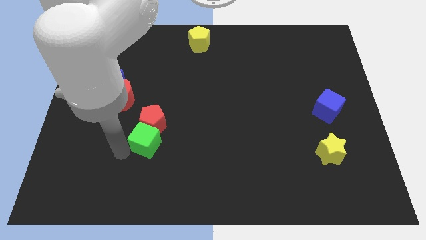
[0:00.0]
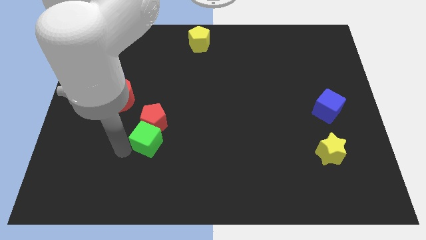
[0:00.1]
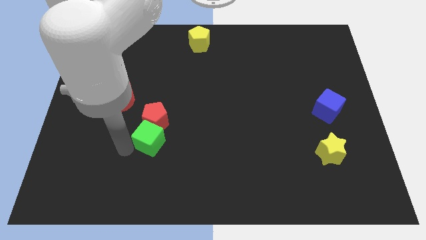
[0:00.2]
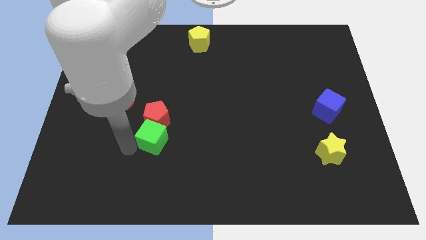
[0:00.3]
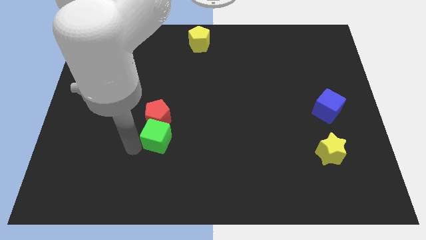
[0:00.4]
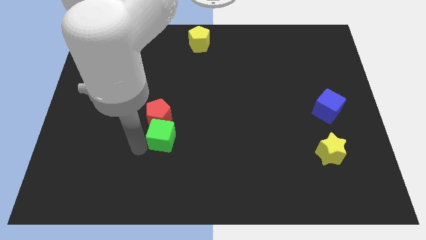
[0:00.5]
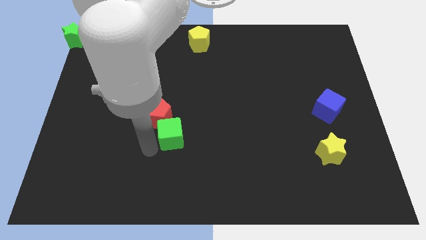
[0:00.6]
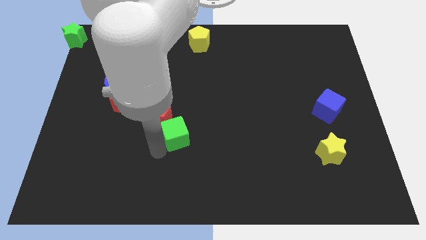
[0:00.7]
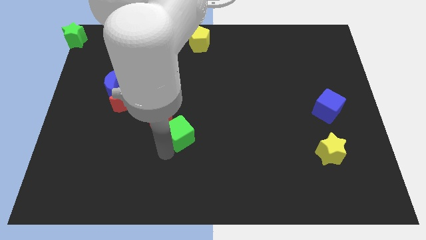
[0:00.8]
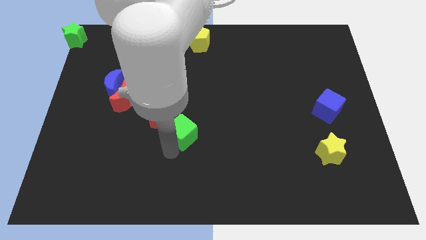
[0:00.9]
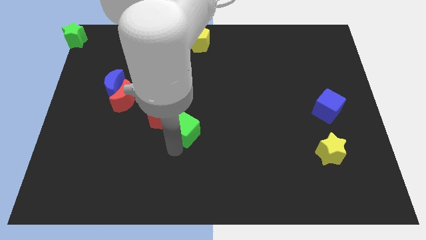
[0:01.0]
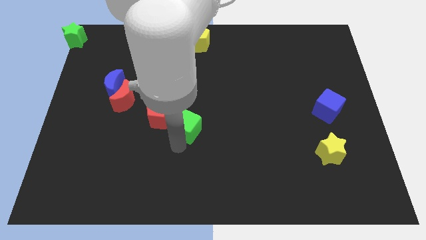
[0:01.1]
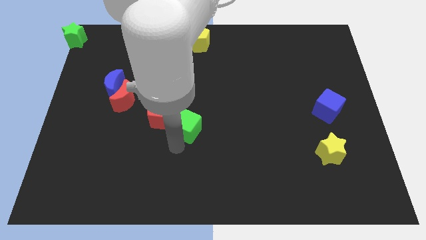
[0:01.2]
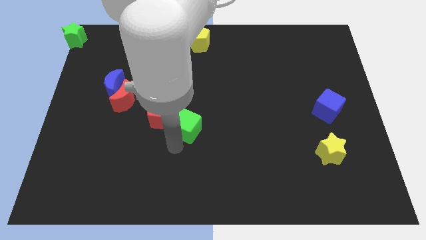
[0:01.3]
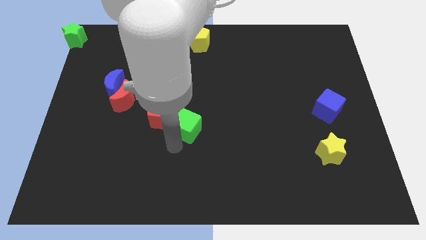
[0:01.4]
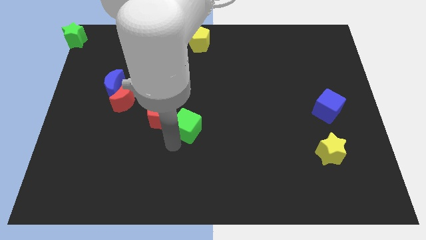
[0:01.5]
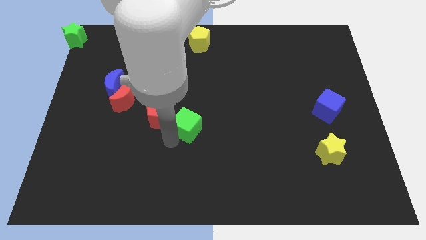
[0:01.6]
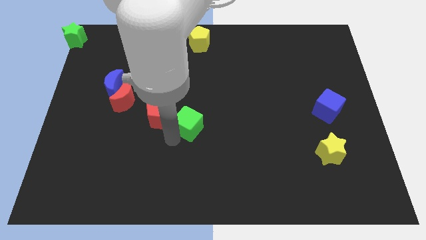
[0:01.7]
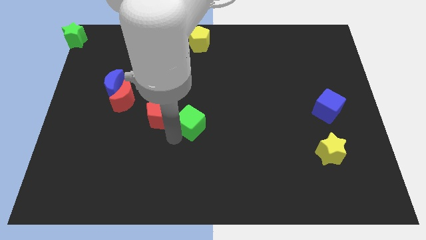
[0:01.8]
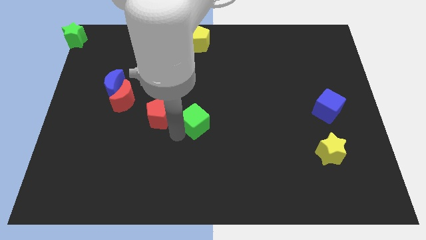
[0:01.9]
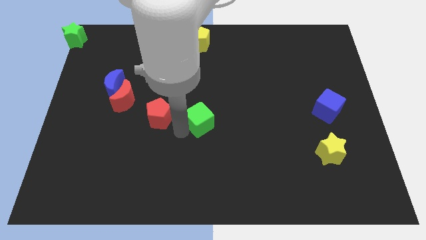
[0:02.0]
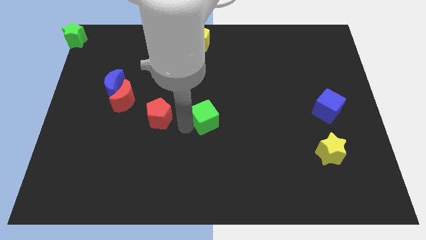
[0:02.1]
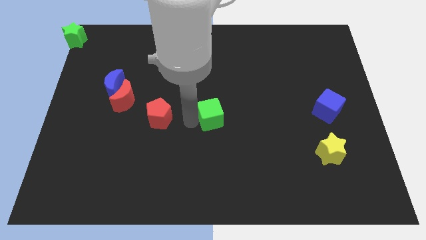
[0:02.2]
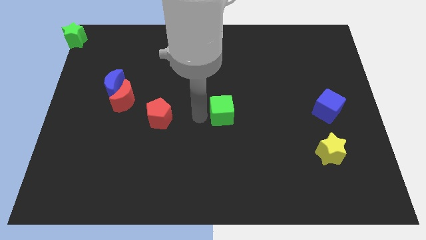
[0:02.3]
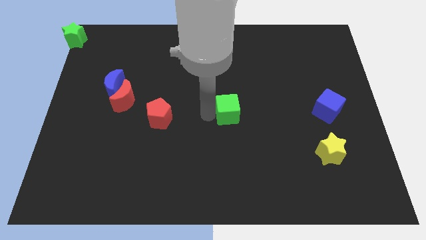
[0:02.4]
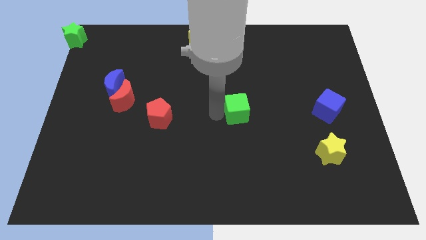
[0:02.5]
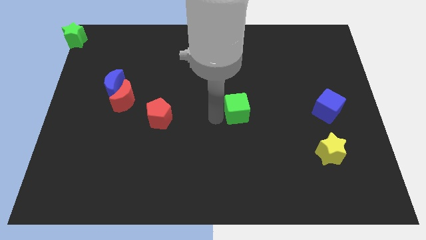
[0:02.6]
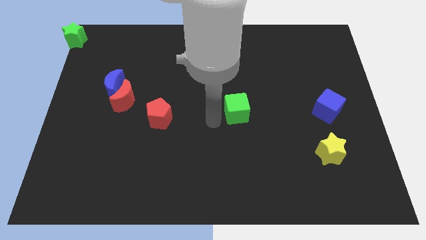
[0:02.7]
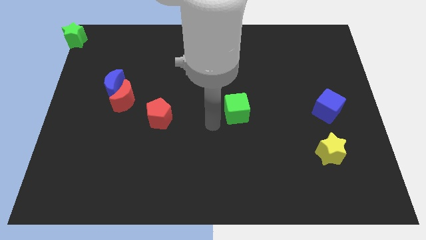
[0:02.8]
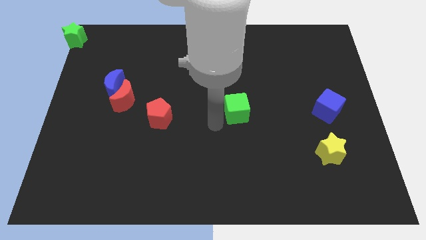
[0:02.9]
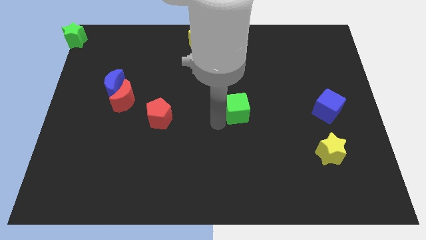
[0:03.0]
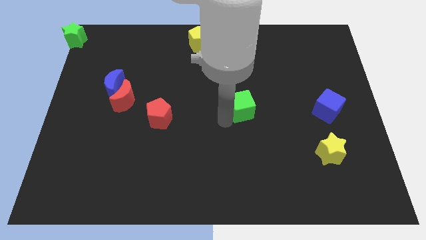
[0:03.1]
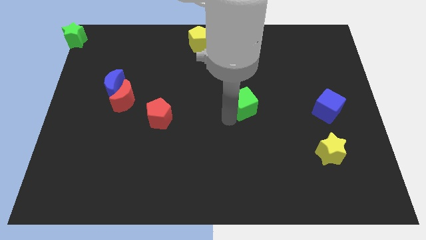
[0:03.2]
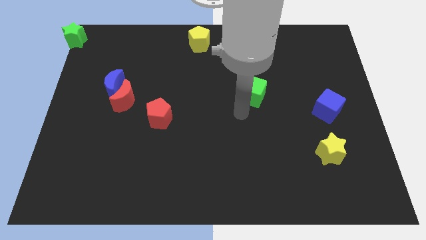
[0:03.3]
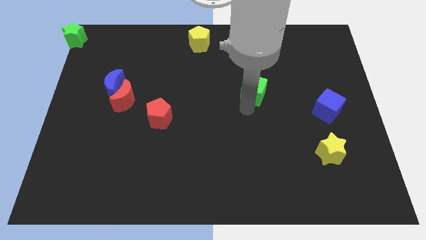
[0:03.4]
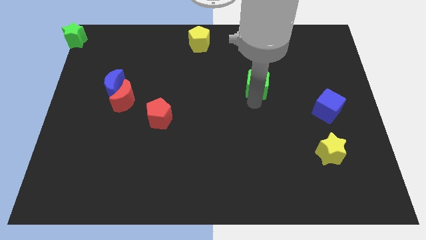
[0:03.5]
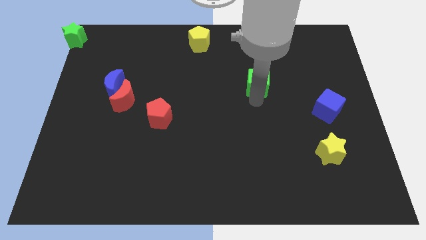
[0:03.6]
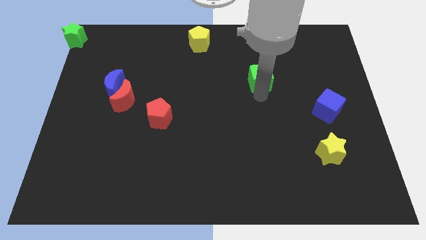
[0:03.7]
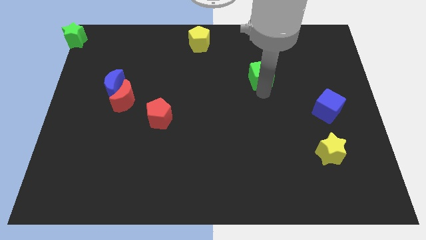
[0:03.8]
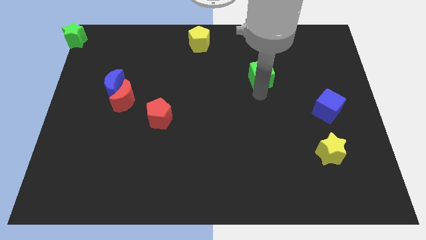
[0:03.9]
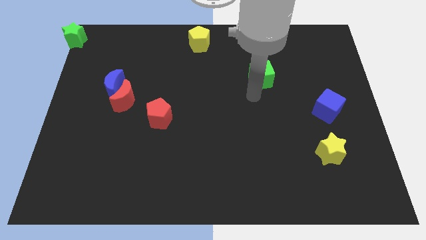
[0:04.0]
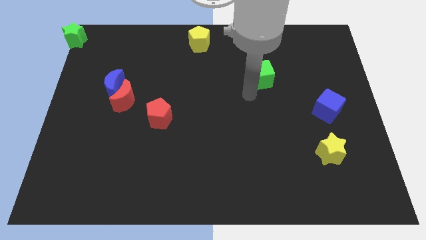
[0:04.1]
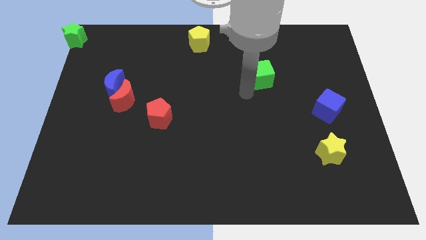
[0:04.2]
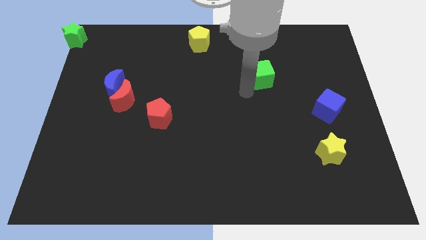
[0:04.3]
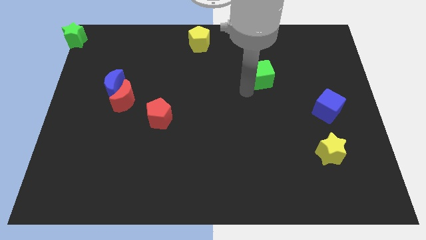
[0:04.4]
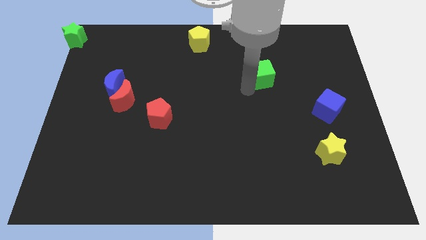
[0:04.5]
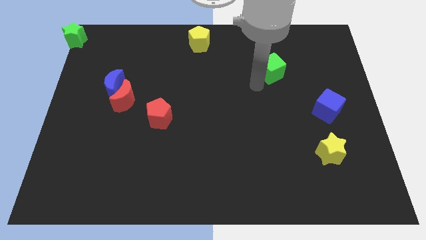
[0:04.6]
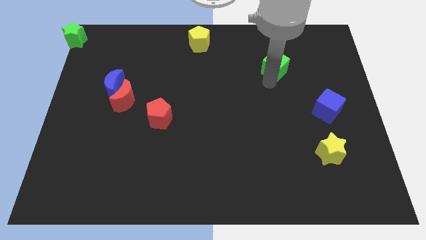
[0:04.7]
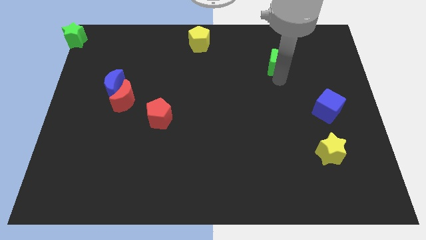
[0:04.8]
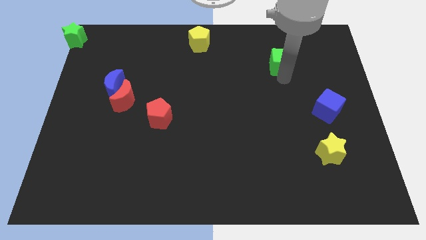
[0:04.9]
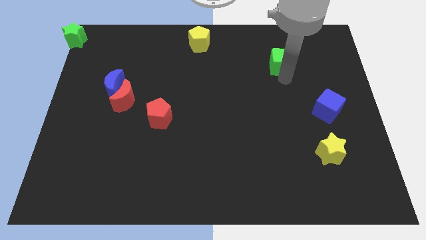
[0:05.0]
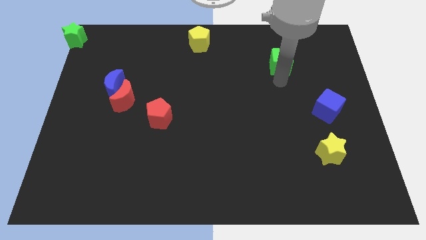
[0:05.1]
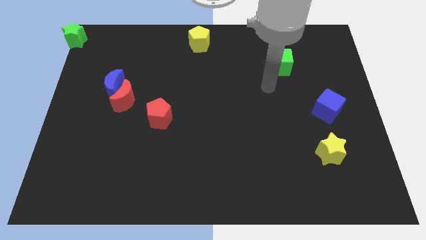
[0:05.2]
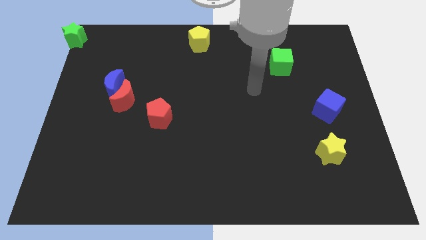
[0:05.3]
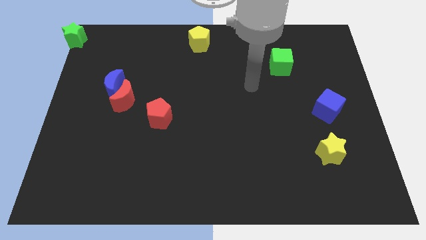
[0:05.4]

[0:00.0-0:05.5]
push the green cube to the top right of the board

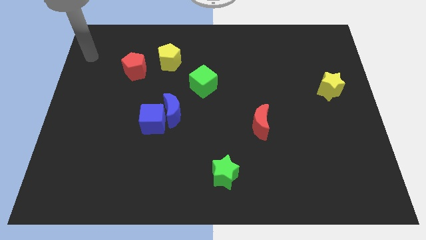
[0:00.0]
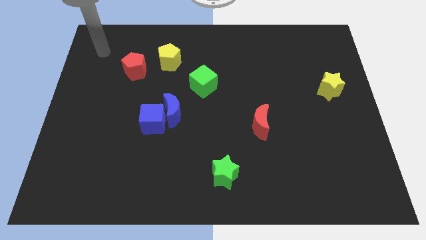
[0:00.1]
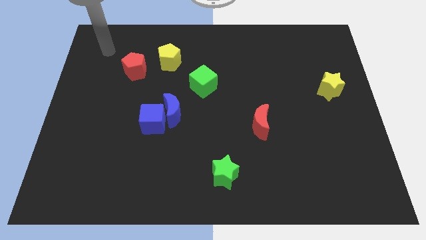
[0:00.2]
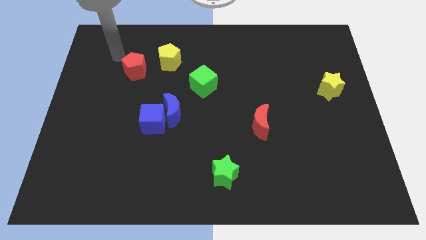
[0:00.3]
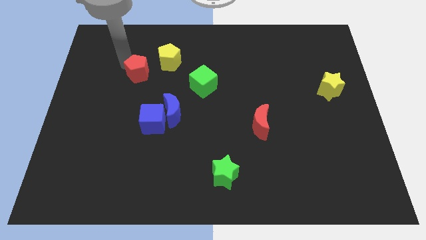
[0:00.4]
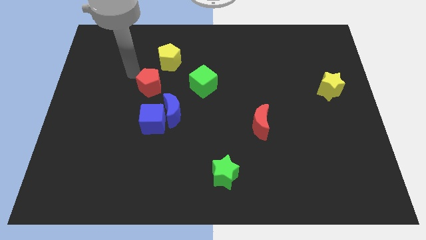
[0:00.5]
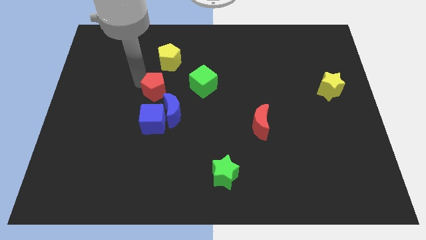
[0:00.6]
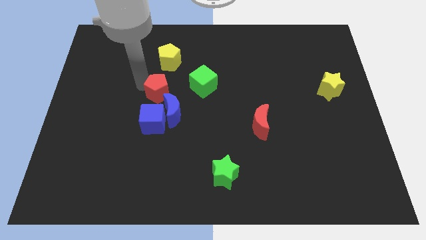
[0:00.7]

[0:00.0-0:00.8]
move the red pentagon to the top of the blue cube

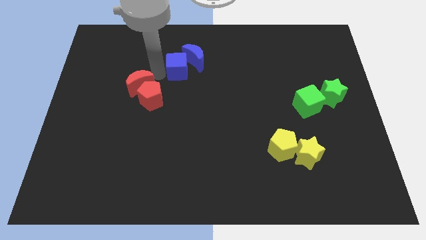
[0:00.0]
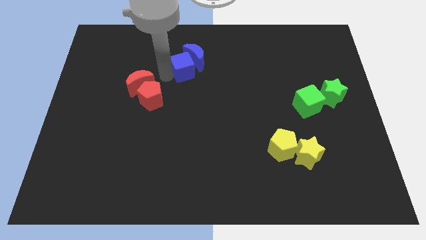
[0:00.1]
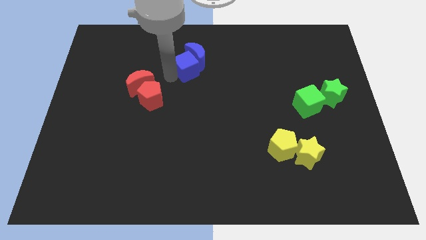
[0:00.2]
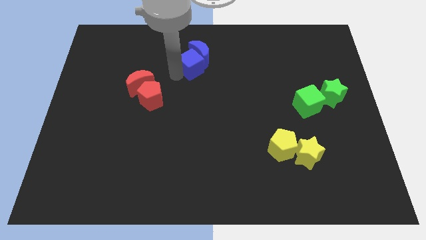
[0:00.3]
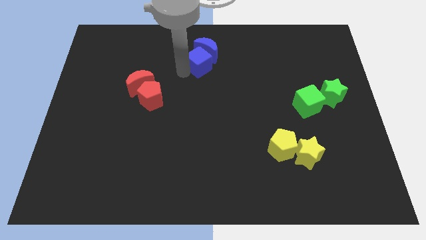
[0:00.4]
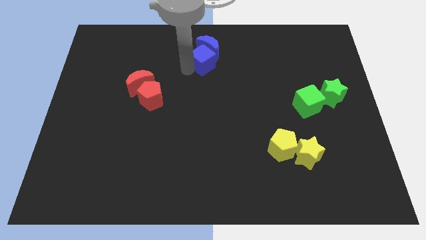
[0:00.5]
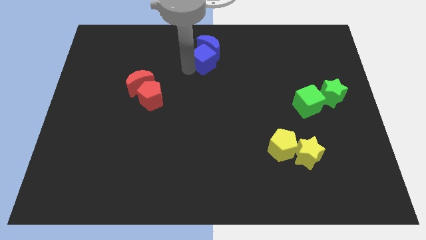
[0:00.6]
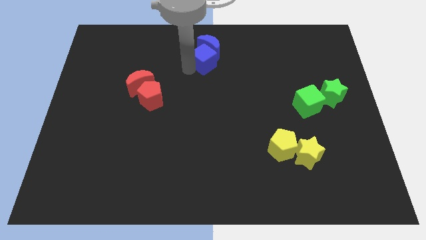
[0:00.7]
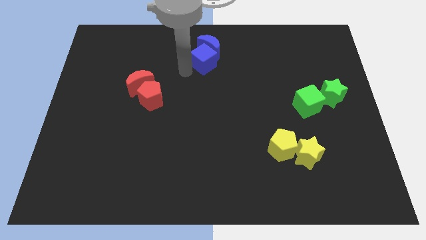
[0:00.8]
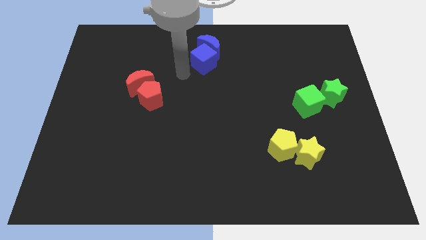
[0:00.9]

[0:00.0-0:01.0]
push blue cube slight towards top

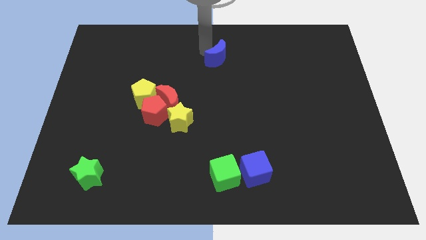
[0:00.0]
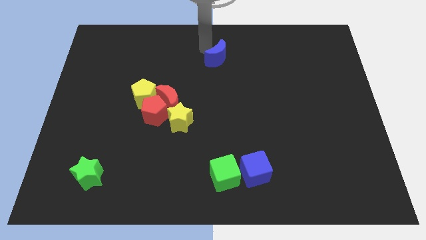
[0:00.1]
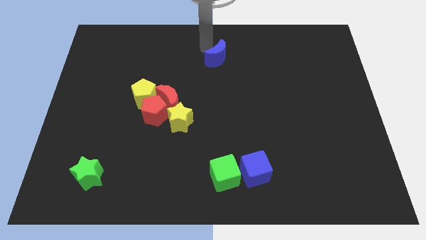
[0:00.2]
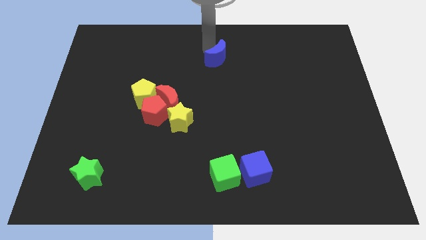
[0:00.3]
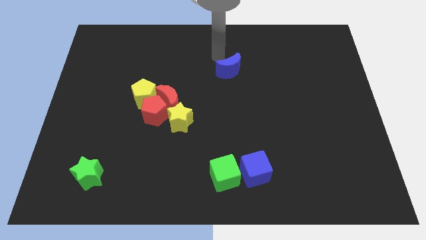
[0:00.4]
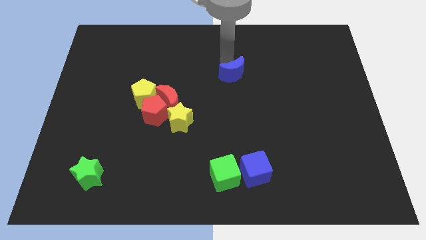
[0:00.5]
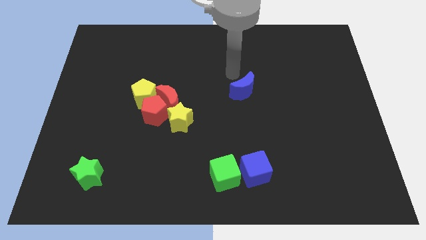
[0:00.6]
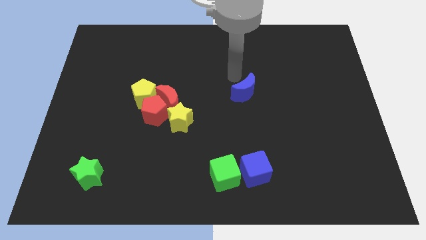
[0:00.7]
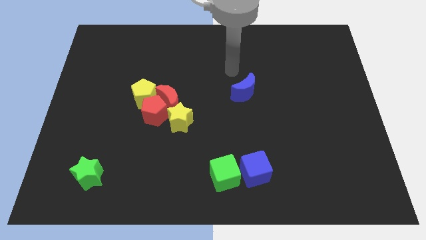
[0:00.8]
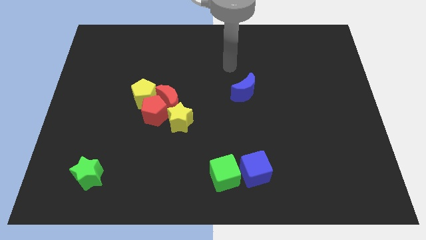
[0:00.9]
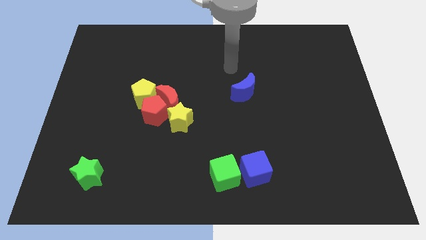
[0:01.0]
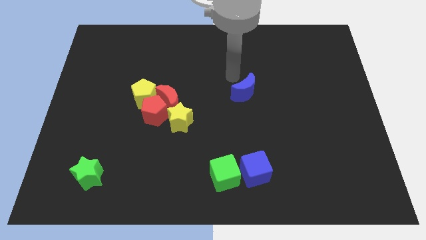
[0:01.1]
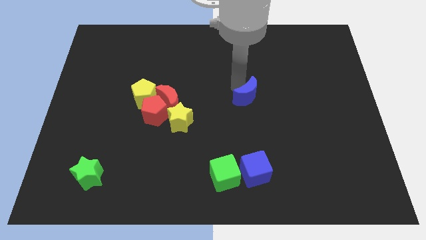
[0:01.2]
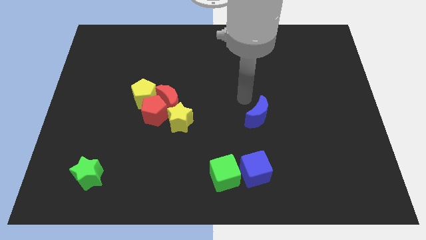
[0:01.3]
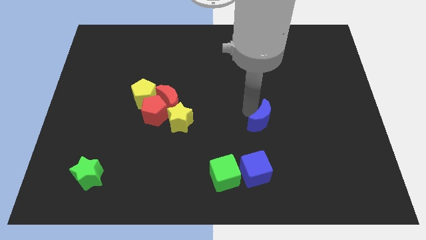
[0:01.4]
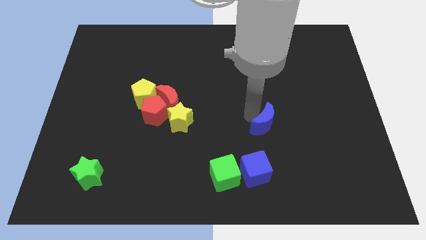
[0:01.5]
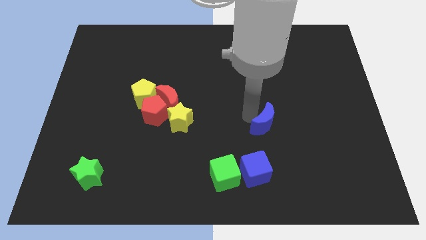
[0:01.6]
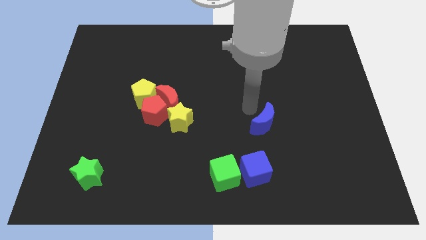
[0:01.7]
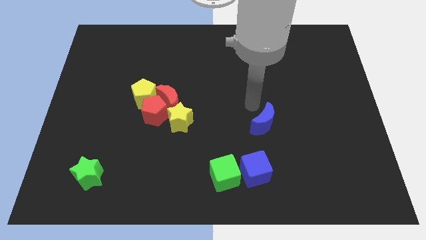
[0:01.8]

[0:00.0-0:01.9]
push blue crescent downwards
